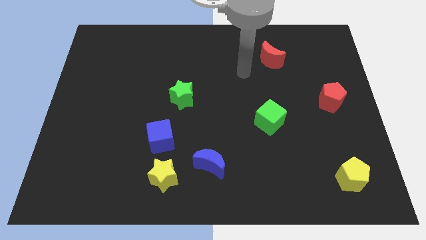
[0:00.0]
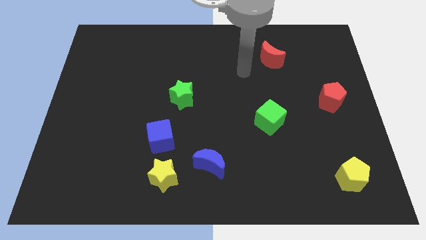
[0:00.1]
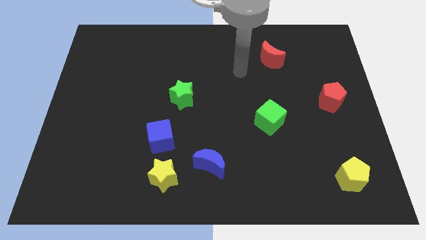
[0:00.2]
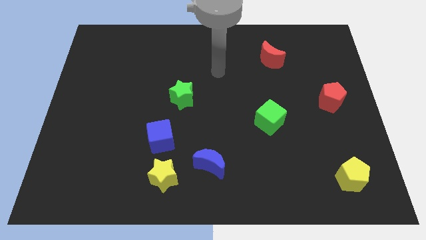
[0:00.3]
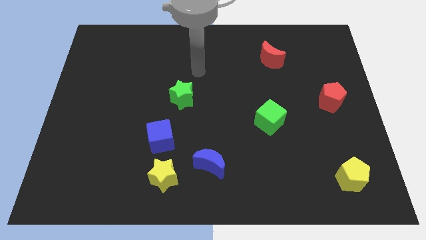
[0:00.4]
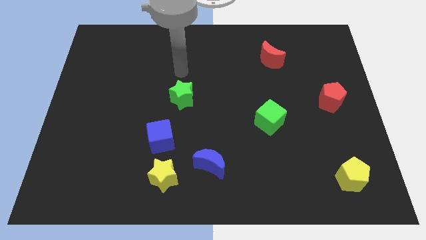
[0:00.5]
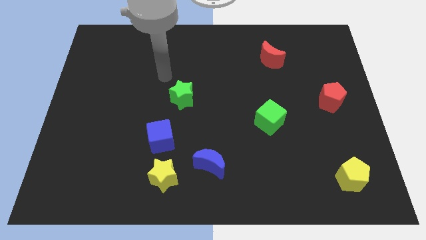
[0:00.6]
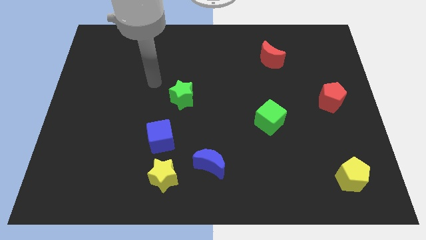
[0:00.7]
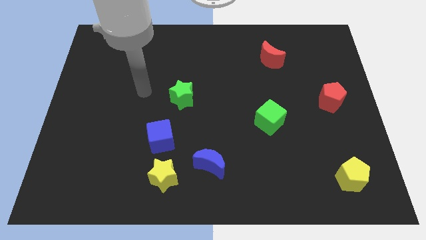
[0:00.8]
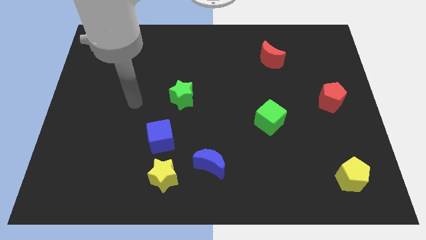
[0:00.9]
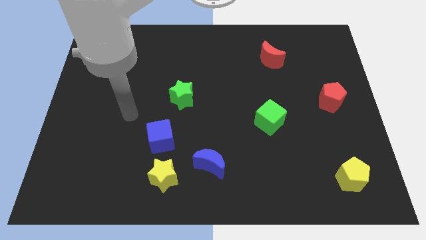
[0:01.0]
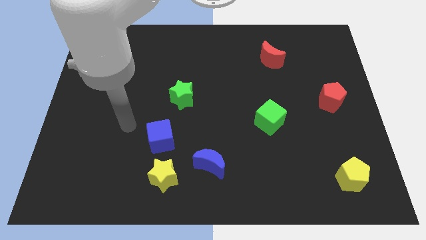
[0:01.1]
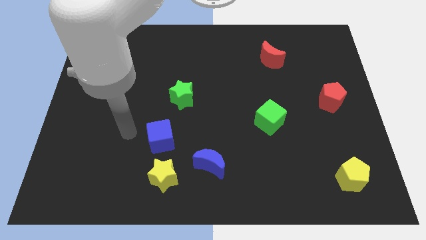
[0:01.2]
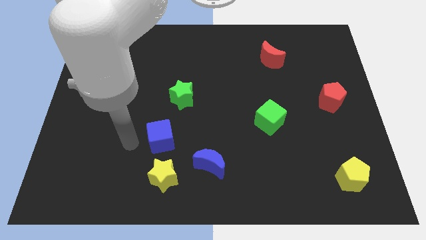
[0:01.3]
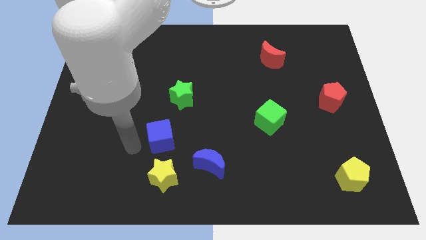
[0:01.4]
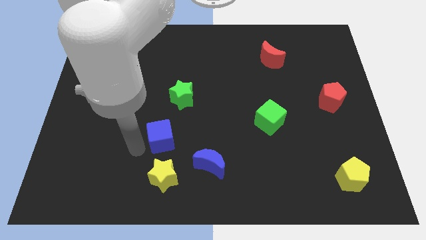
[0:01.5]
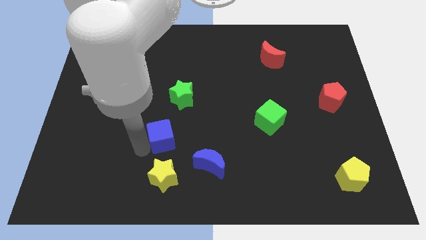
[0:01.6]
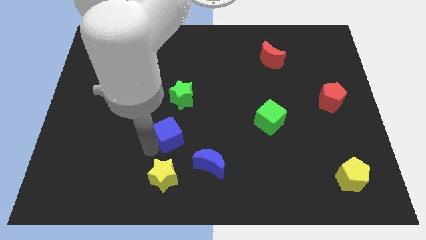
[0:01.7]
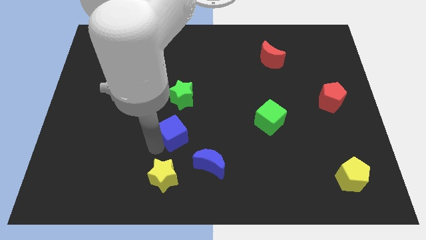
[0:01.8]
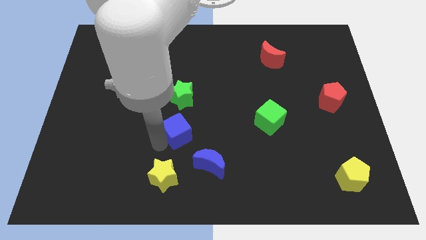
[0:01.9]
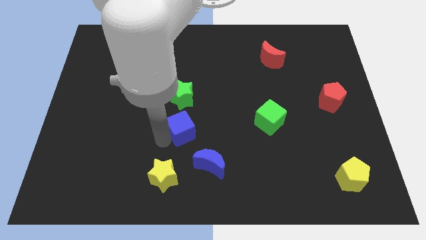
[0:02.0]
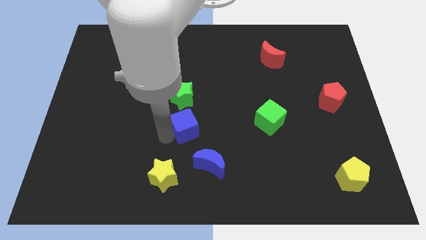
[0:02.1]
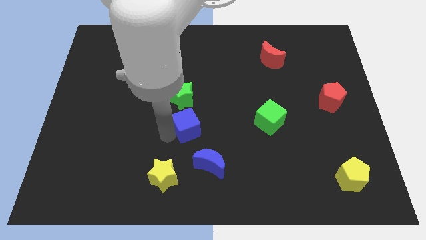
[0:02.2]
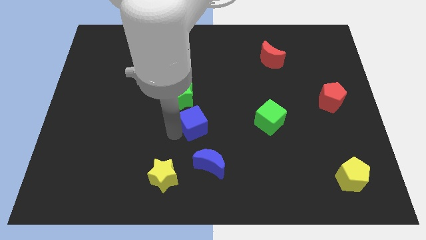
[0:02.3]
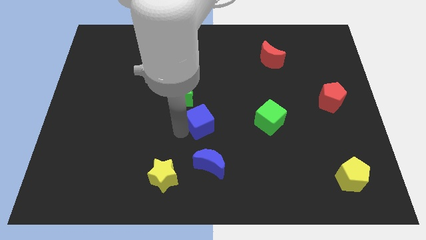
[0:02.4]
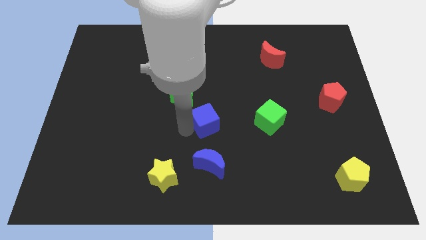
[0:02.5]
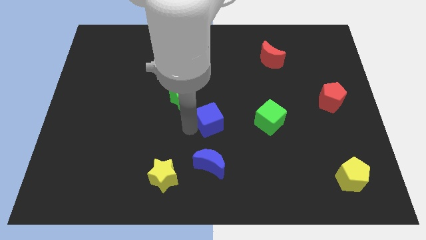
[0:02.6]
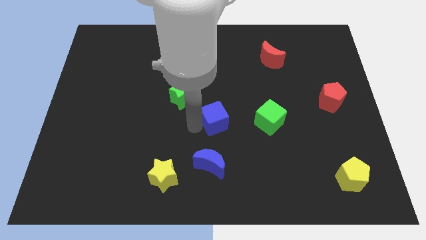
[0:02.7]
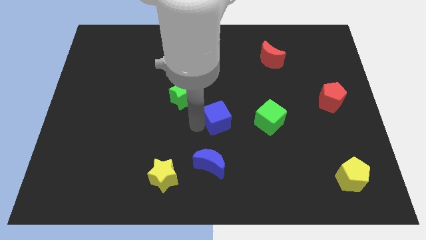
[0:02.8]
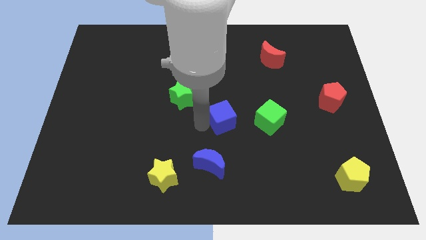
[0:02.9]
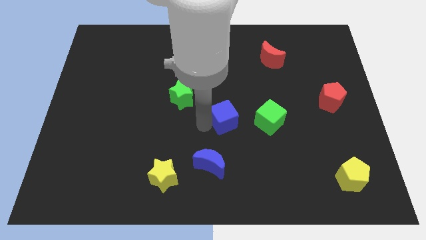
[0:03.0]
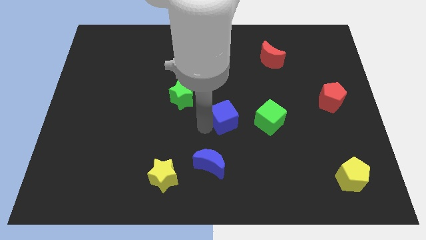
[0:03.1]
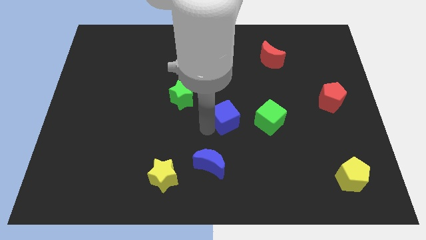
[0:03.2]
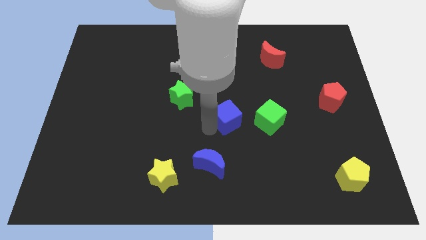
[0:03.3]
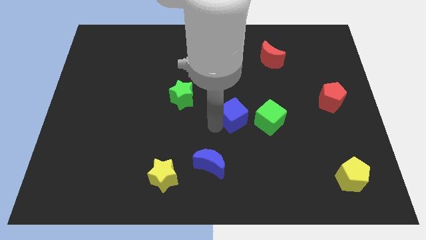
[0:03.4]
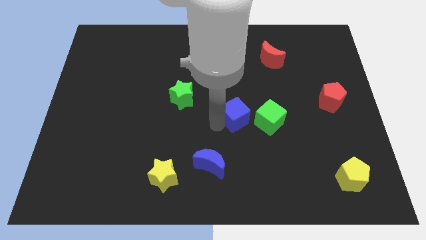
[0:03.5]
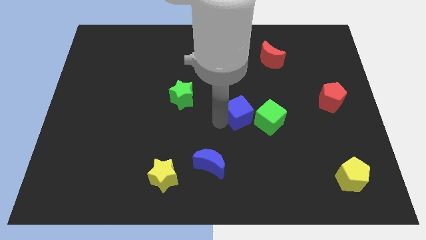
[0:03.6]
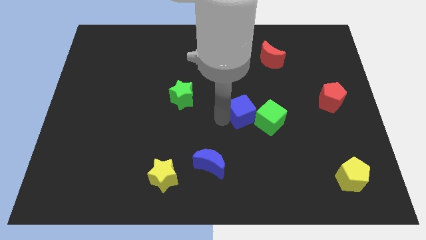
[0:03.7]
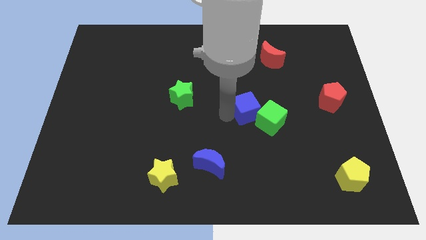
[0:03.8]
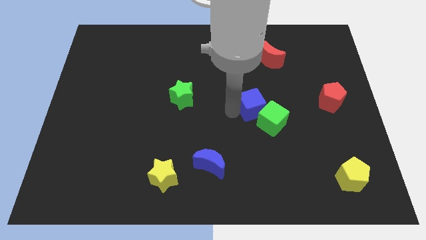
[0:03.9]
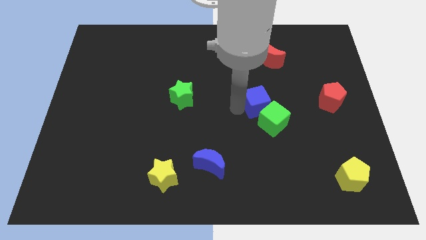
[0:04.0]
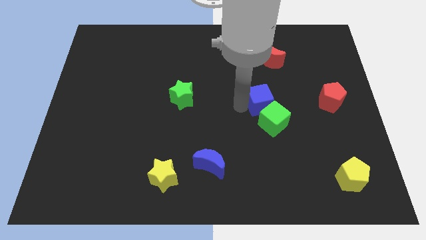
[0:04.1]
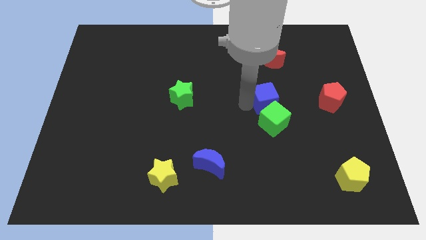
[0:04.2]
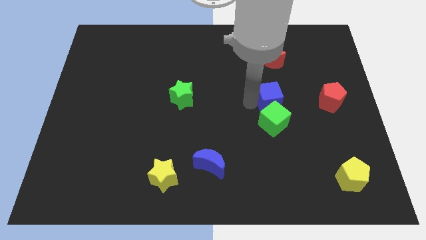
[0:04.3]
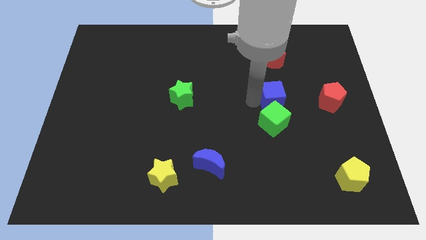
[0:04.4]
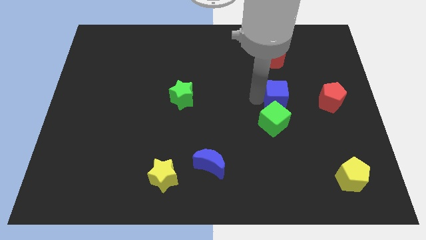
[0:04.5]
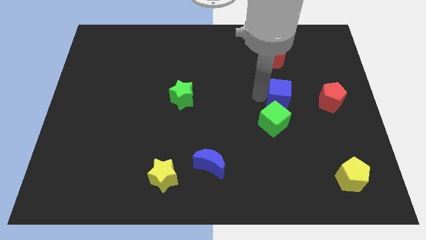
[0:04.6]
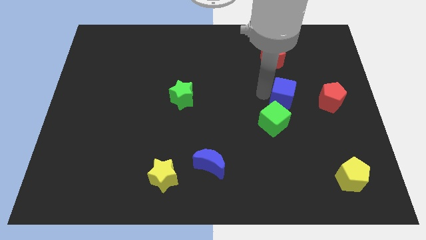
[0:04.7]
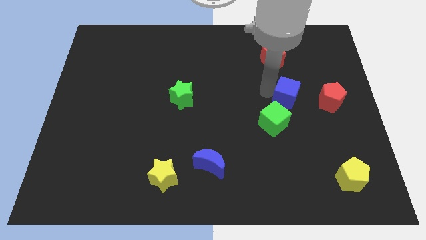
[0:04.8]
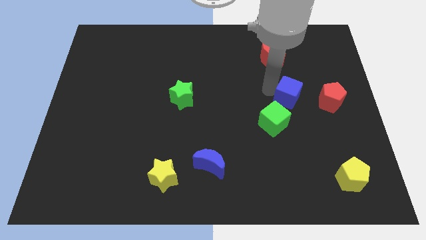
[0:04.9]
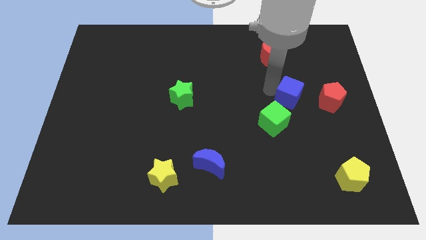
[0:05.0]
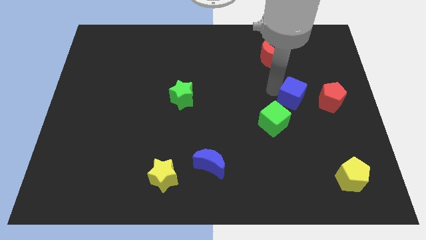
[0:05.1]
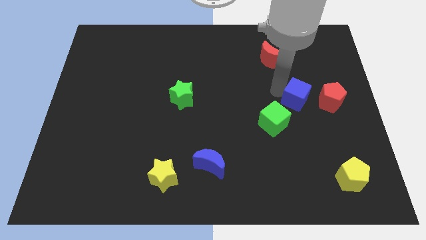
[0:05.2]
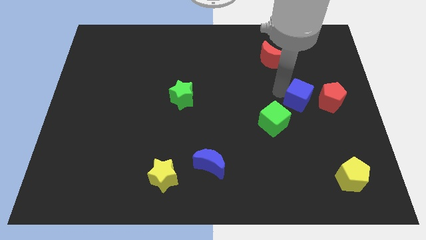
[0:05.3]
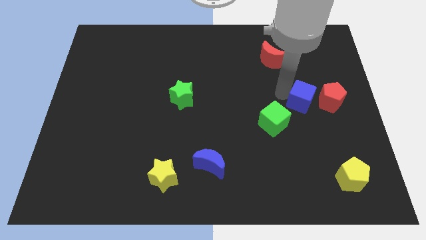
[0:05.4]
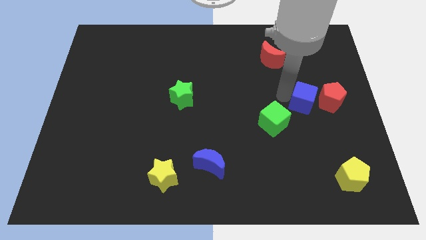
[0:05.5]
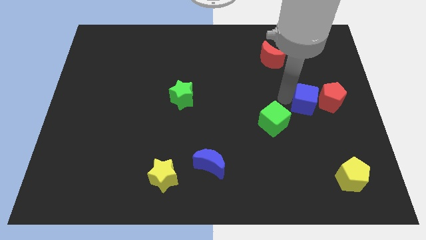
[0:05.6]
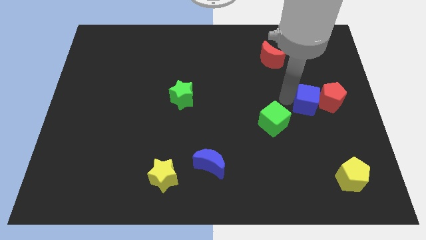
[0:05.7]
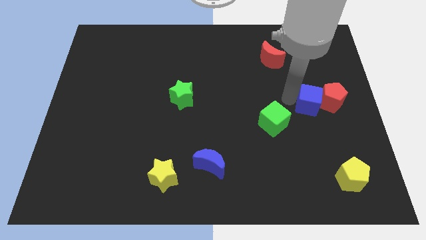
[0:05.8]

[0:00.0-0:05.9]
slide the blue cube towards the red pentagon

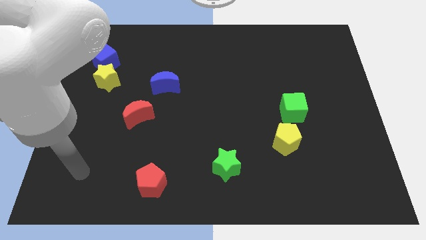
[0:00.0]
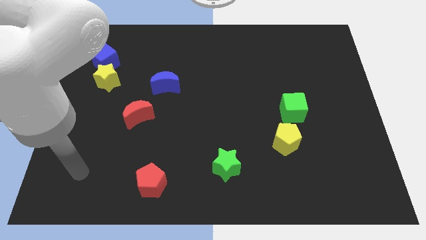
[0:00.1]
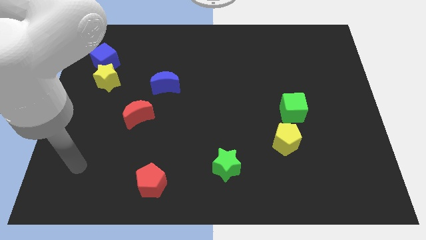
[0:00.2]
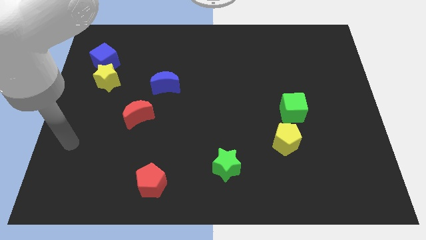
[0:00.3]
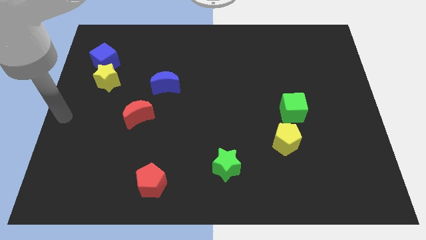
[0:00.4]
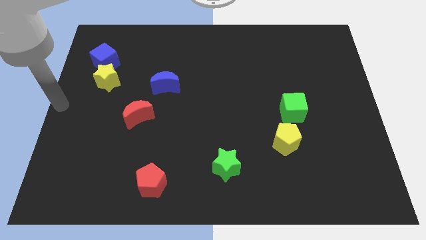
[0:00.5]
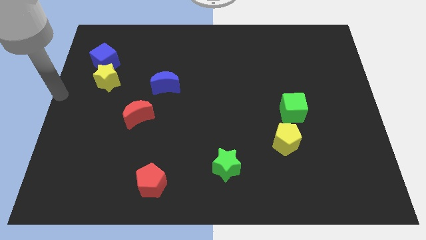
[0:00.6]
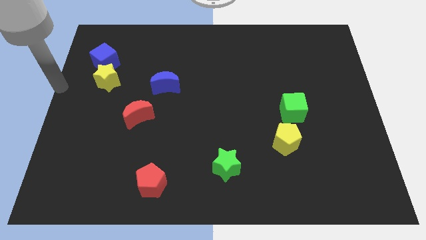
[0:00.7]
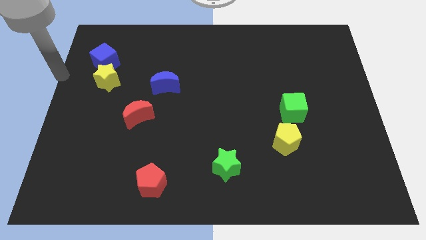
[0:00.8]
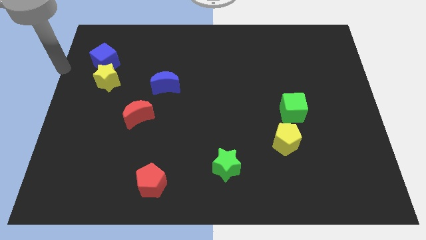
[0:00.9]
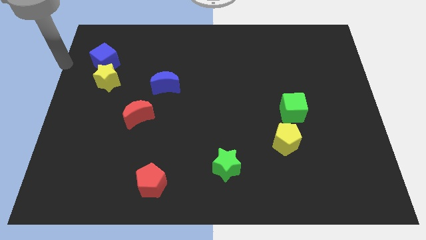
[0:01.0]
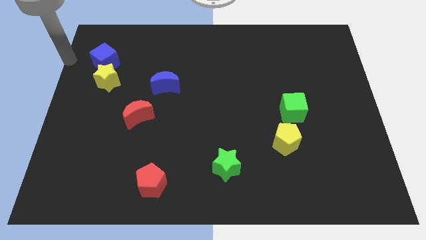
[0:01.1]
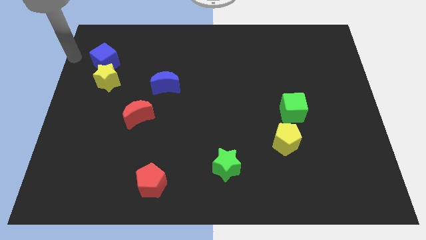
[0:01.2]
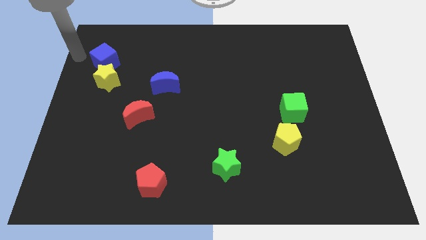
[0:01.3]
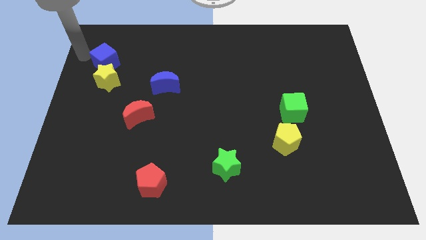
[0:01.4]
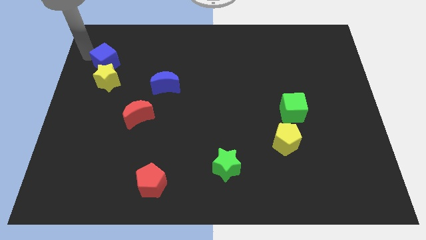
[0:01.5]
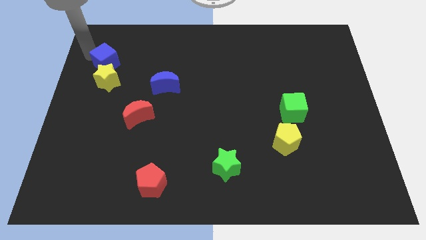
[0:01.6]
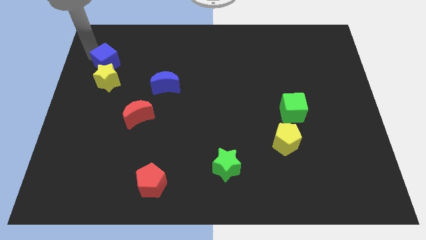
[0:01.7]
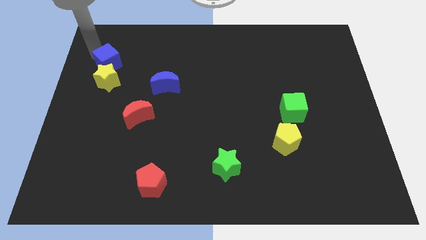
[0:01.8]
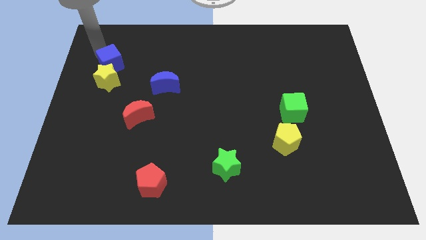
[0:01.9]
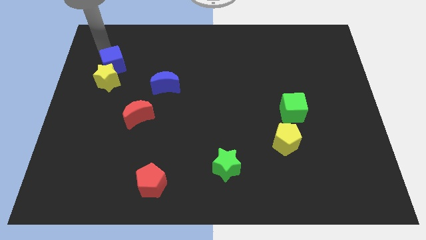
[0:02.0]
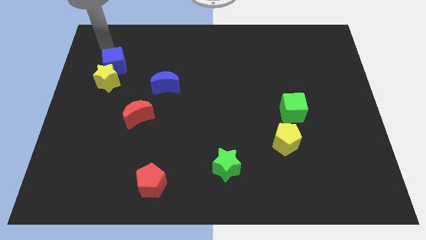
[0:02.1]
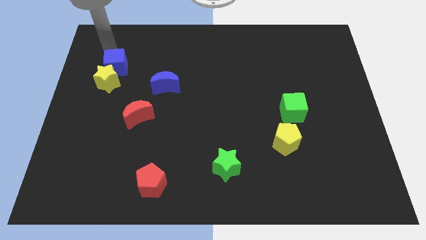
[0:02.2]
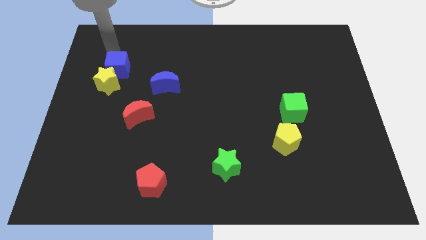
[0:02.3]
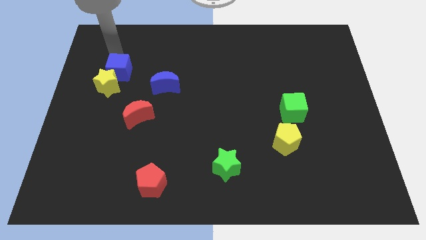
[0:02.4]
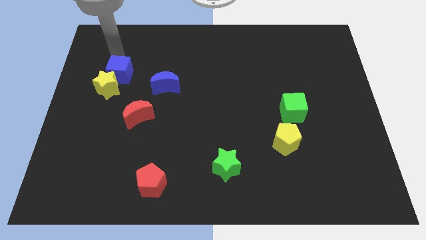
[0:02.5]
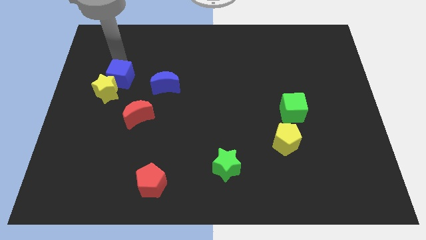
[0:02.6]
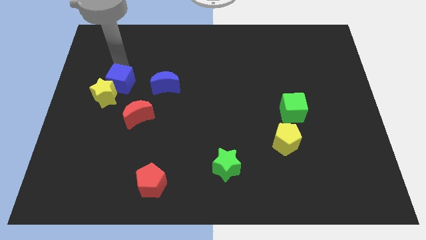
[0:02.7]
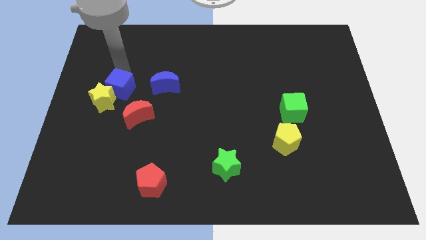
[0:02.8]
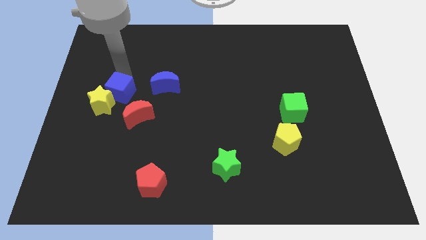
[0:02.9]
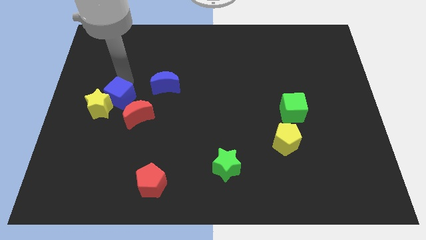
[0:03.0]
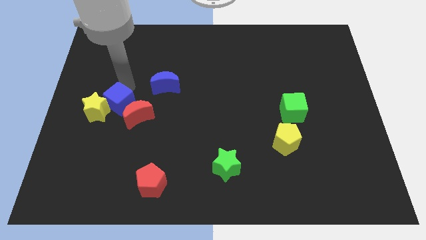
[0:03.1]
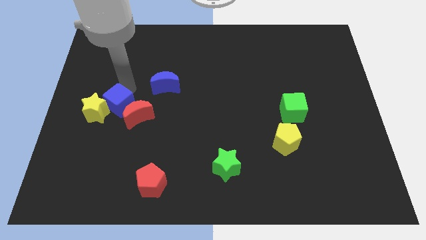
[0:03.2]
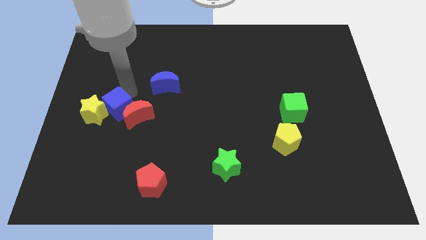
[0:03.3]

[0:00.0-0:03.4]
push the blue cube to the red moon
